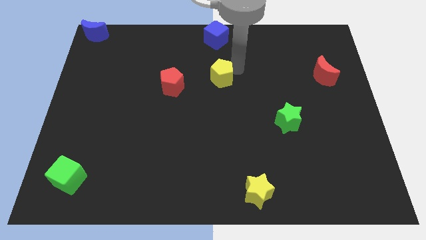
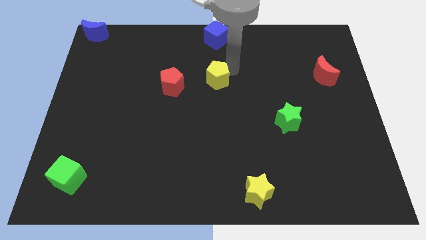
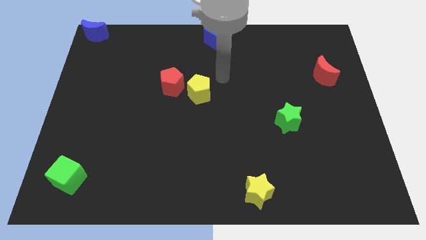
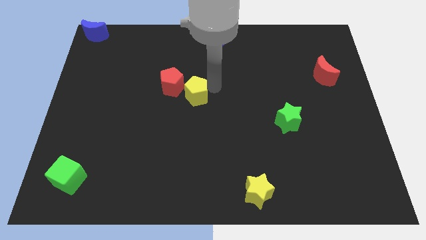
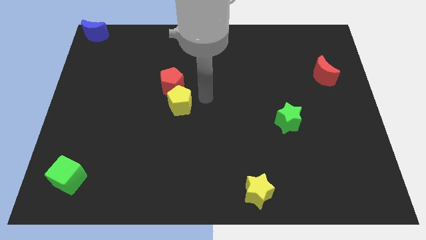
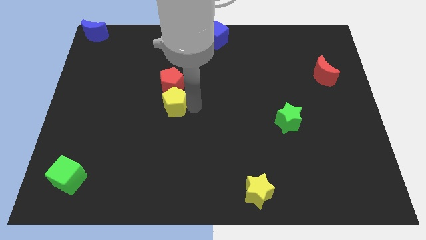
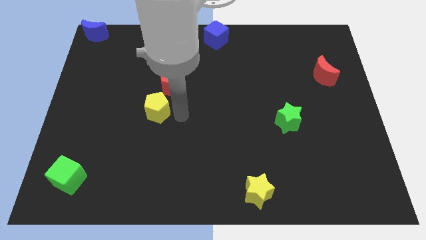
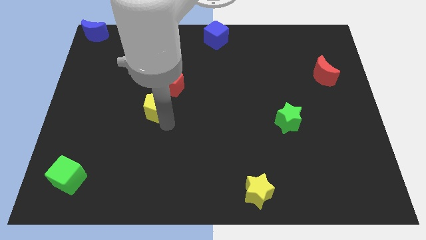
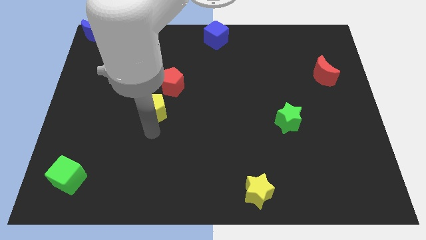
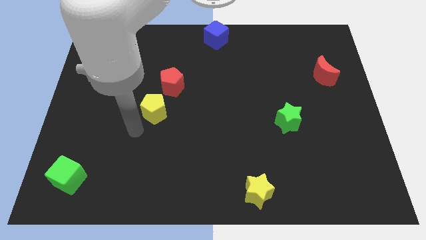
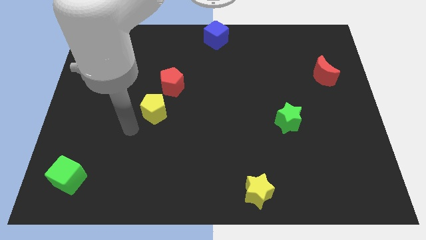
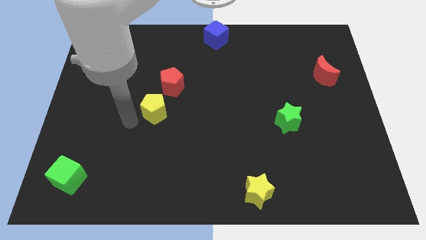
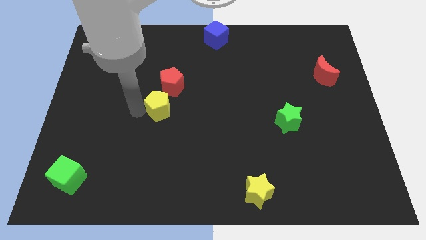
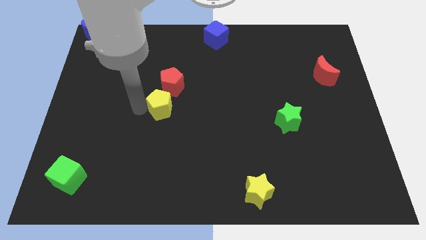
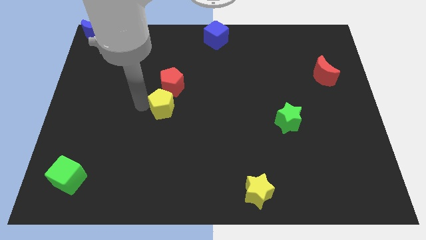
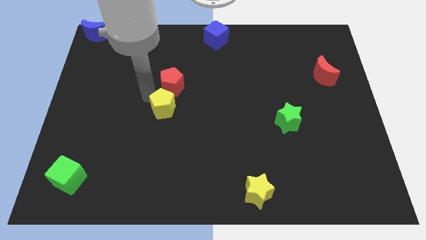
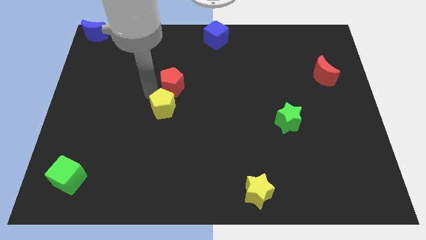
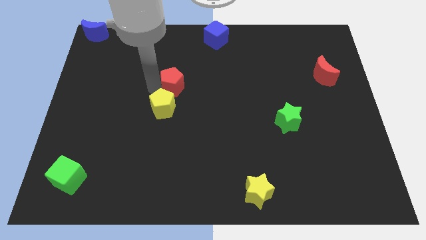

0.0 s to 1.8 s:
push the yellow pentagon to the bottom of the red pentagon

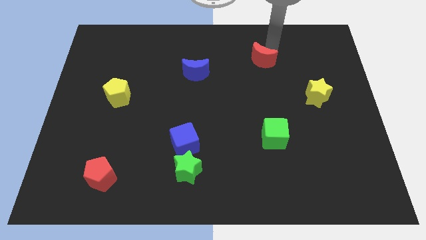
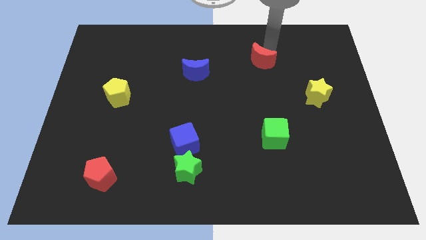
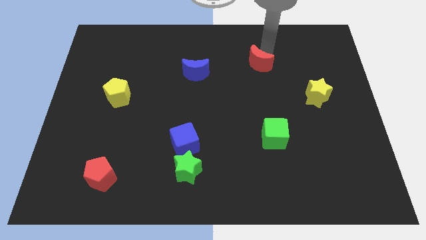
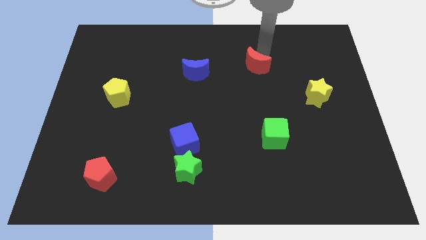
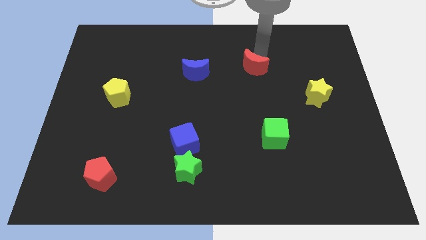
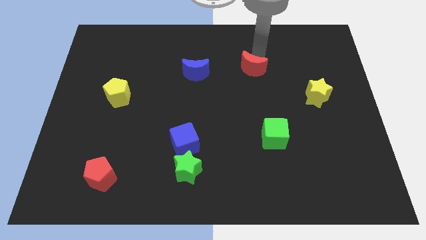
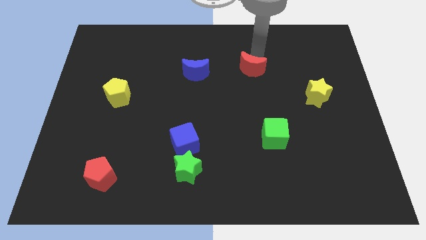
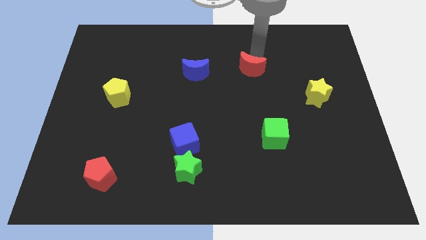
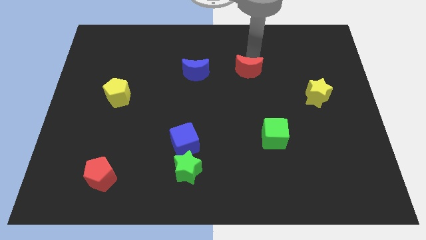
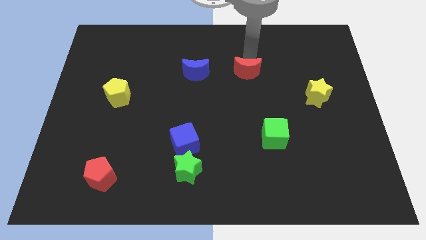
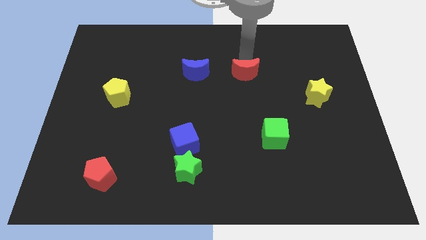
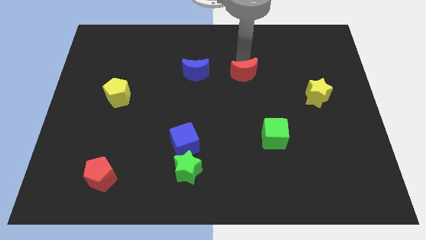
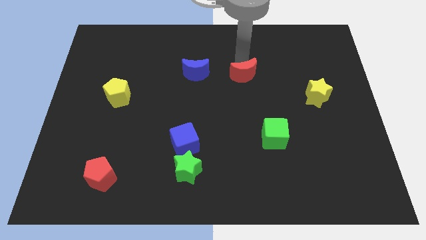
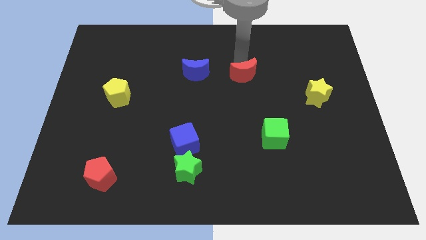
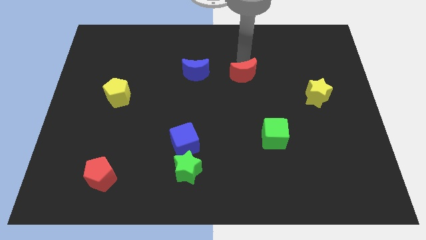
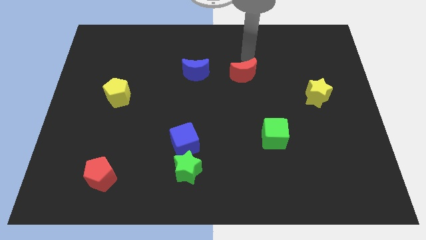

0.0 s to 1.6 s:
place the red moon to the right of the blue moon

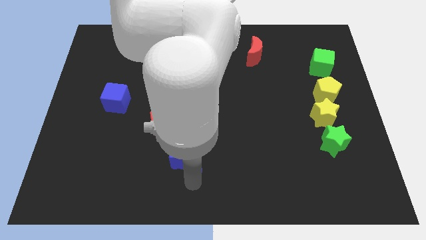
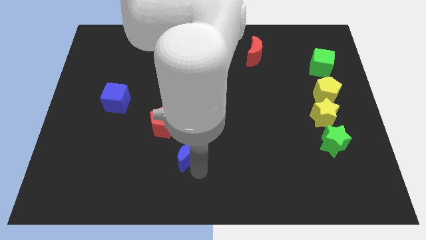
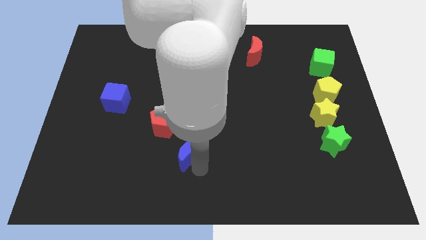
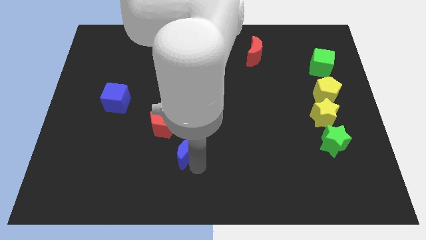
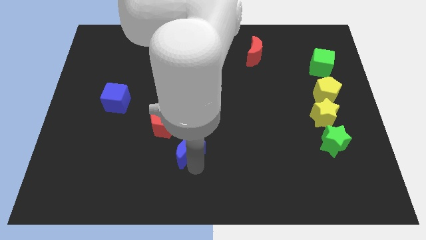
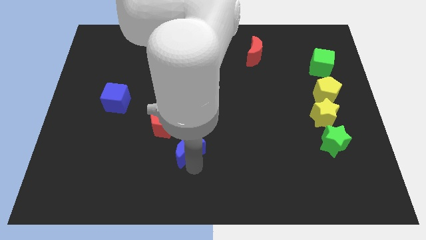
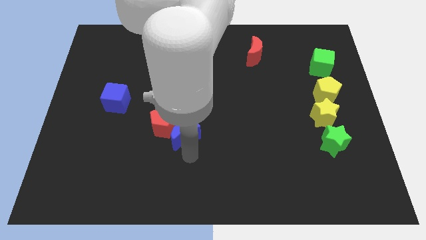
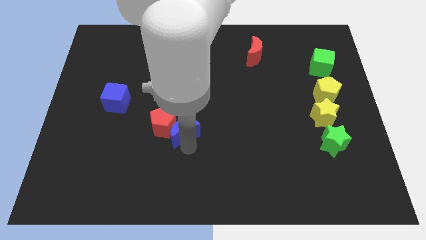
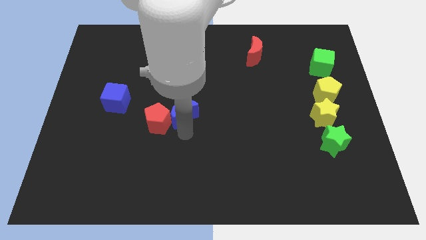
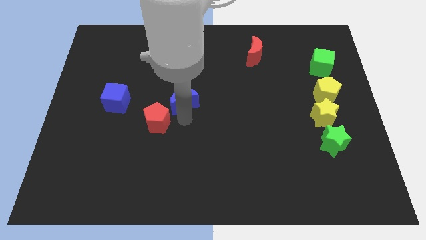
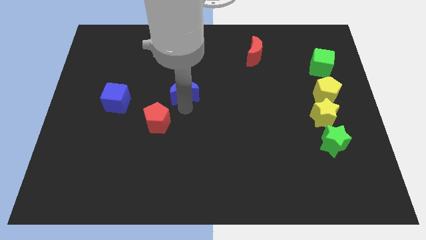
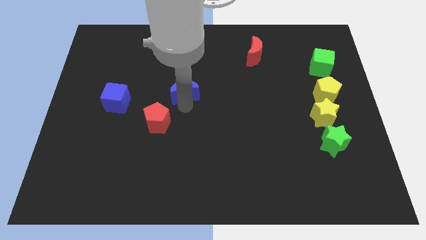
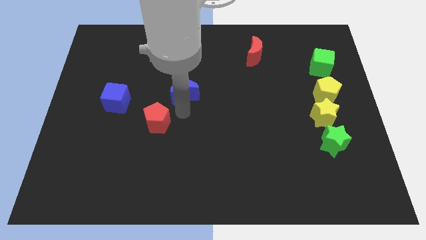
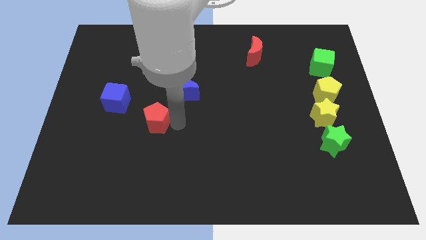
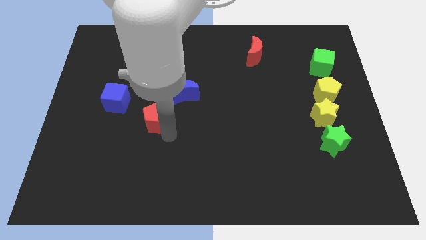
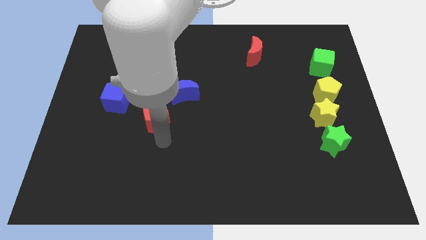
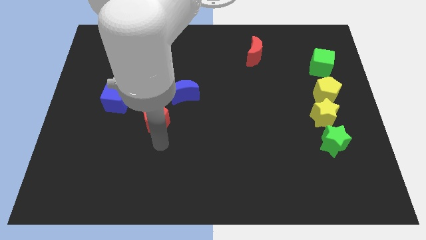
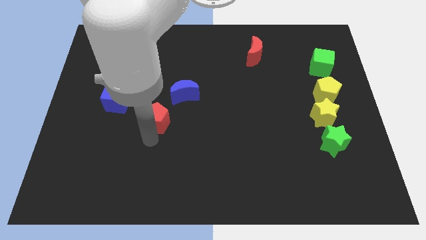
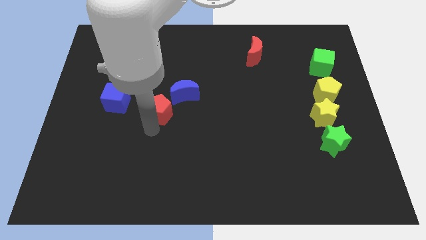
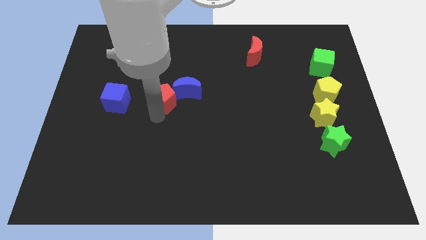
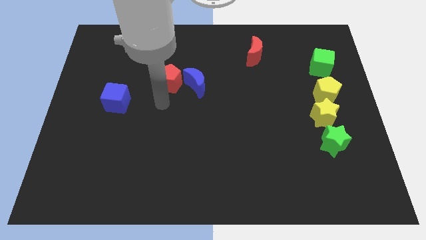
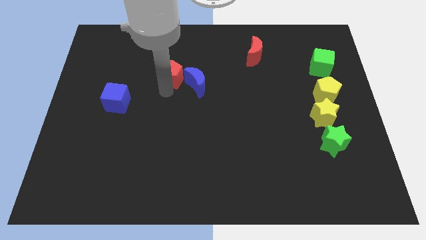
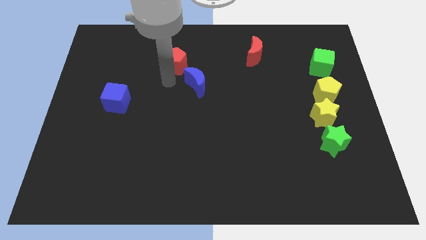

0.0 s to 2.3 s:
place the blue crescent and red pentagon together in between the blue cube and red crescent

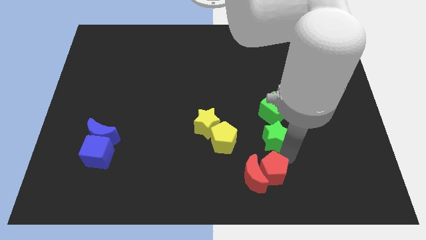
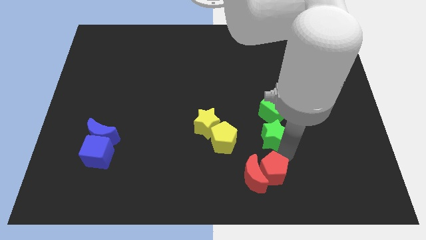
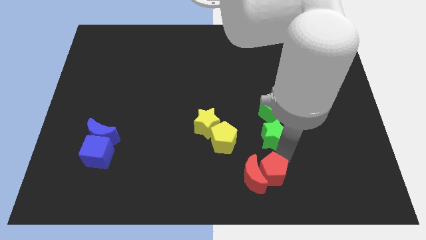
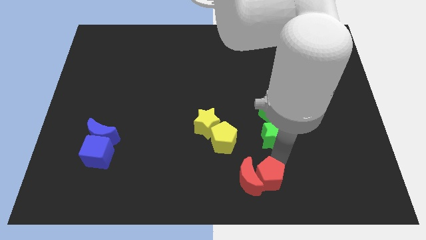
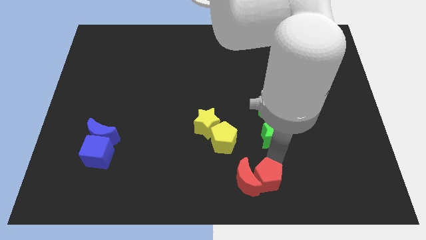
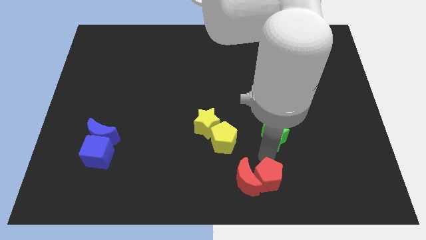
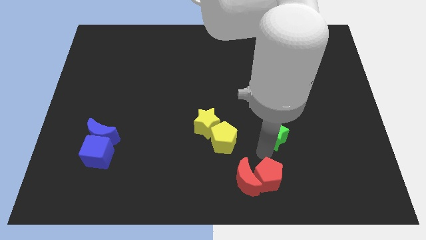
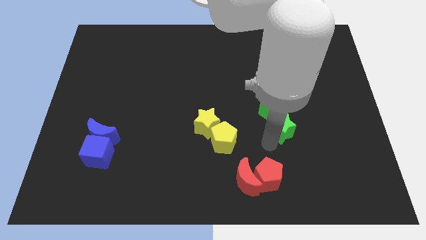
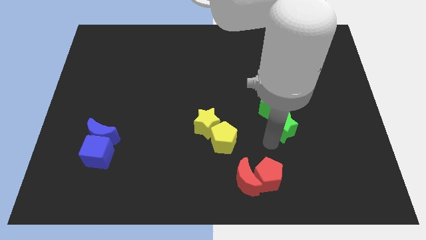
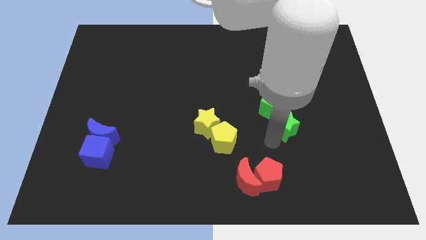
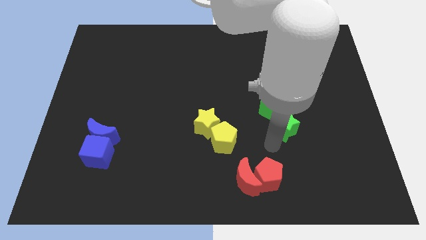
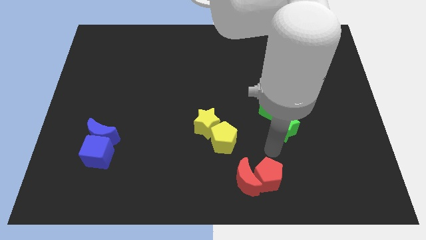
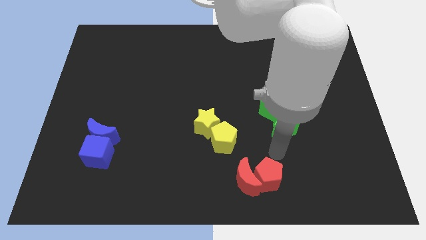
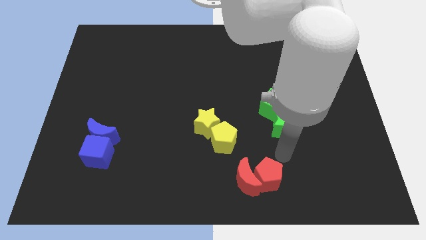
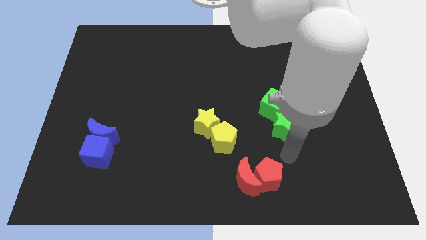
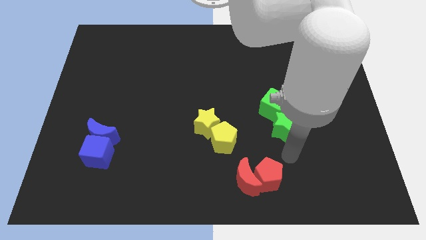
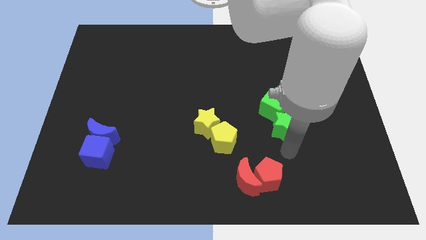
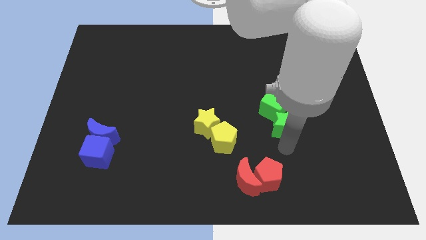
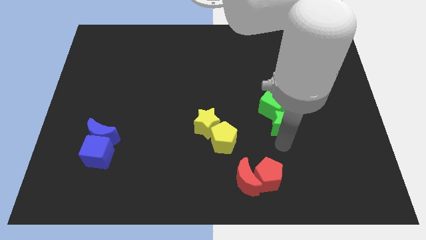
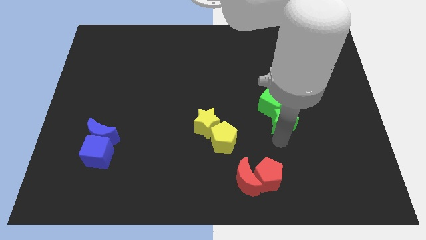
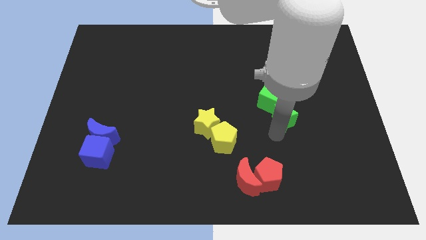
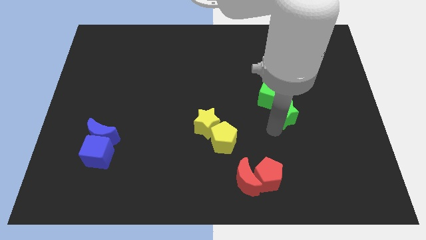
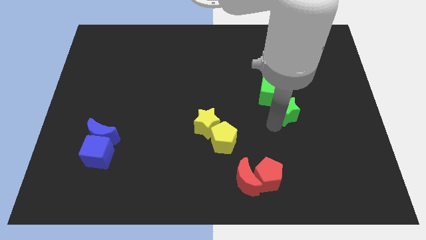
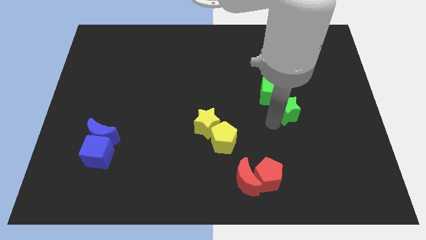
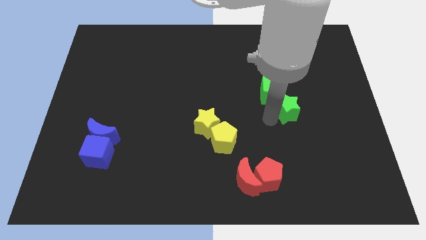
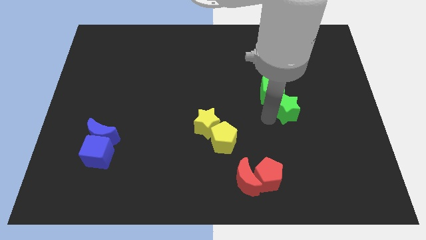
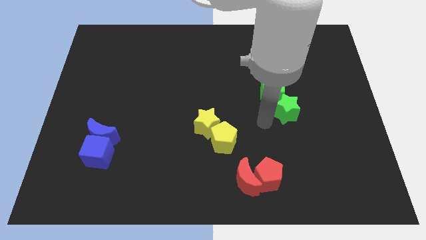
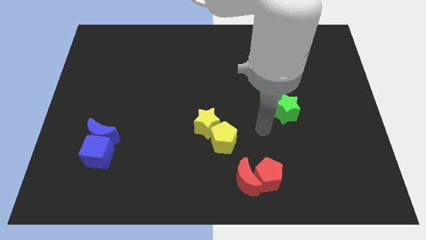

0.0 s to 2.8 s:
separate the red and green blocks

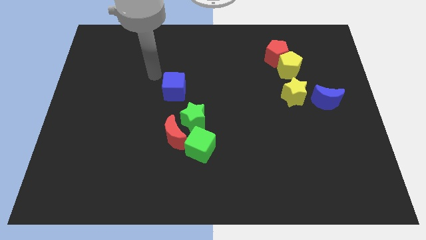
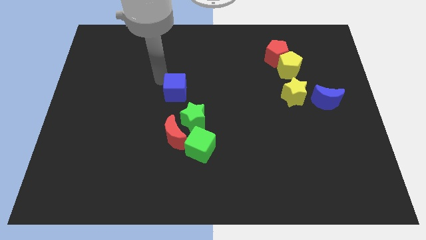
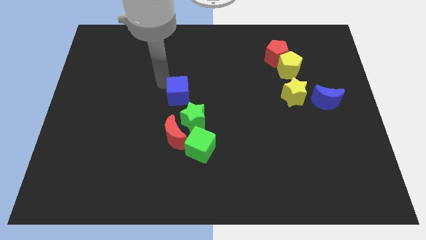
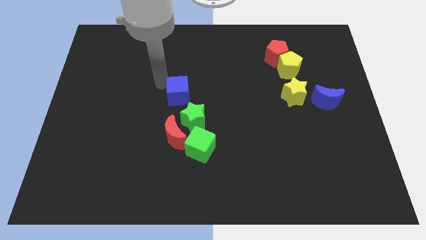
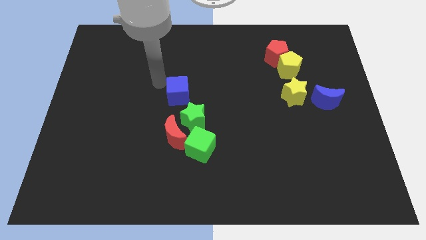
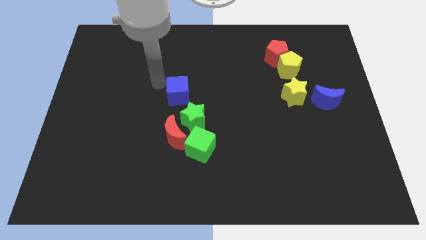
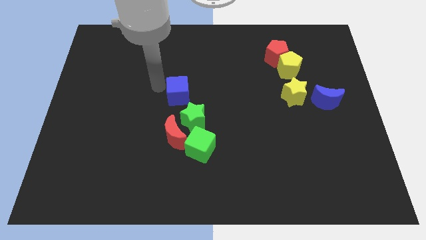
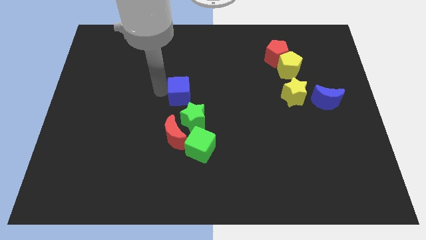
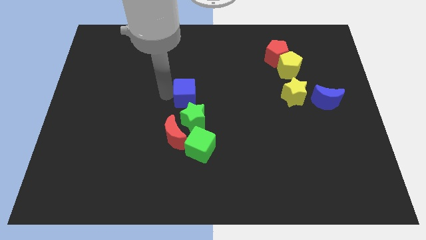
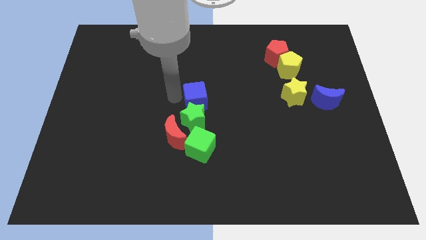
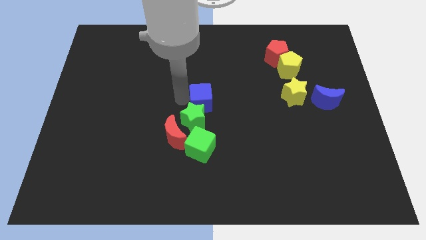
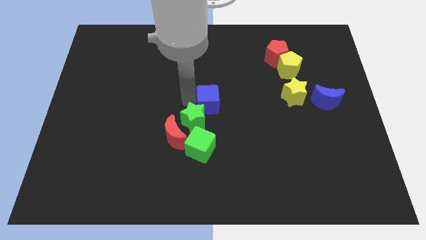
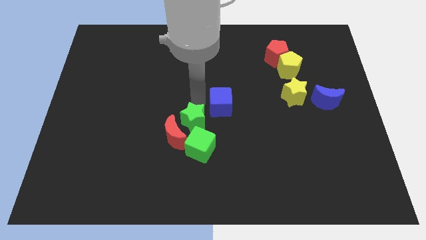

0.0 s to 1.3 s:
put the blue cube at the center of the board
